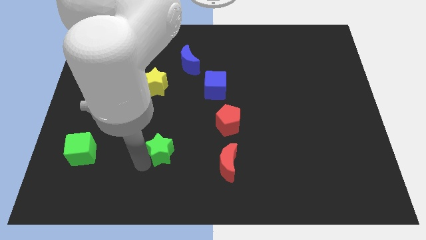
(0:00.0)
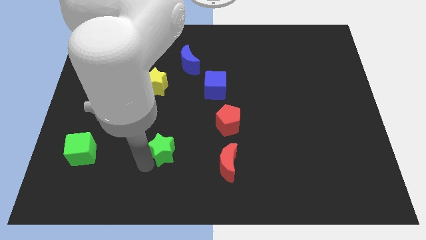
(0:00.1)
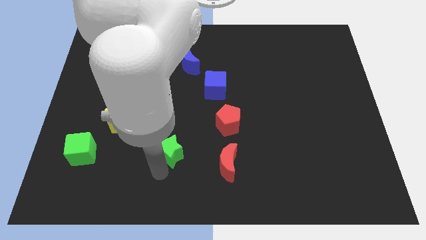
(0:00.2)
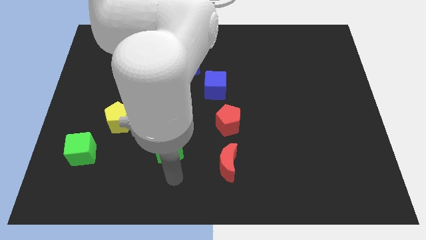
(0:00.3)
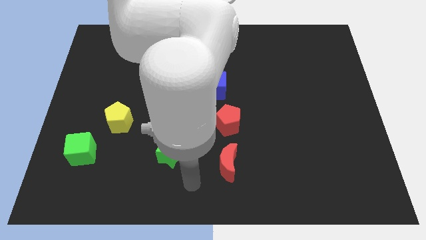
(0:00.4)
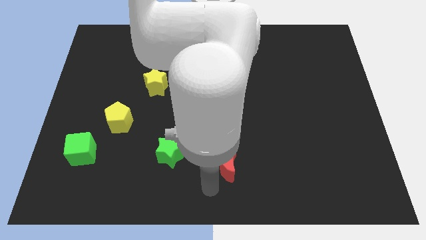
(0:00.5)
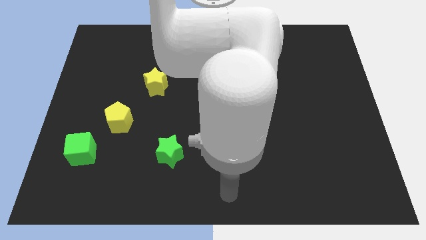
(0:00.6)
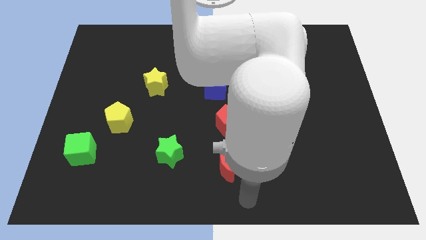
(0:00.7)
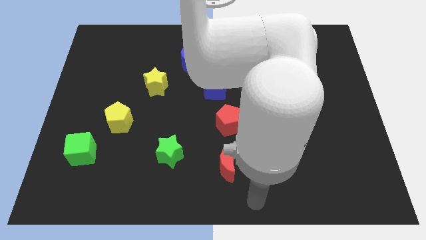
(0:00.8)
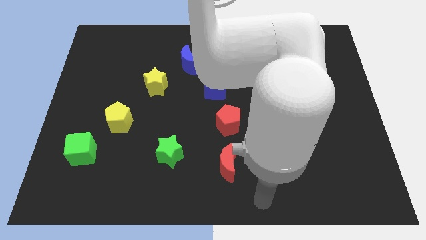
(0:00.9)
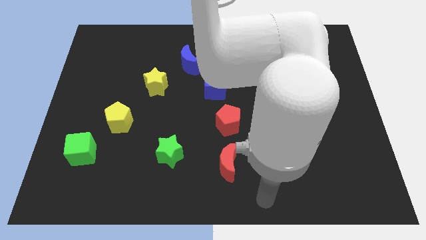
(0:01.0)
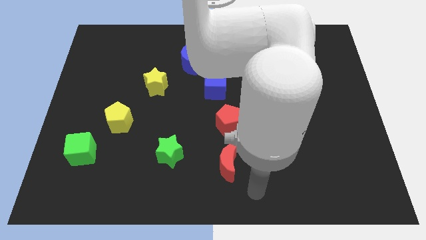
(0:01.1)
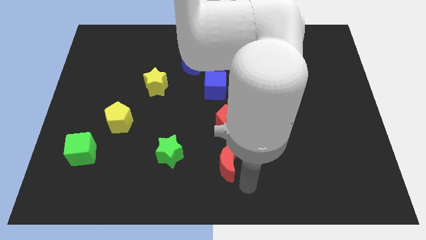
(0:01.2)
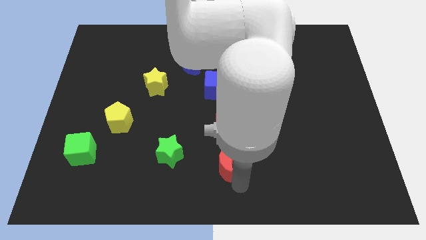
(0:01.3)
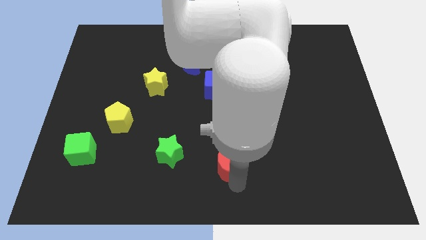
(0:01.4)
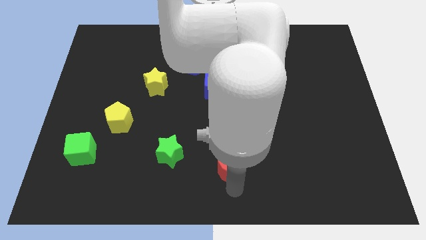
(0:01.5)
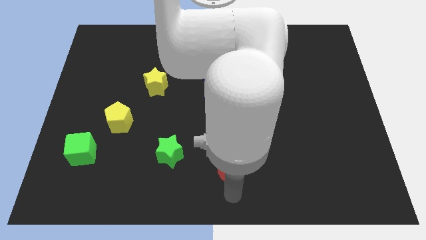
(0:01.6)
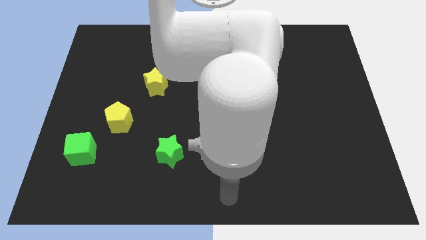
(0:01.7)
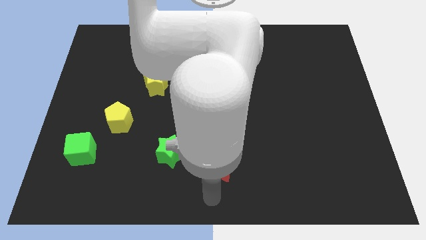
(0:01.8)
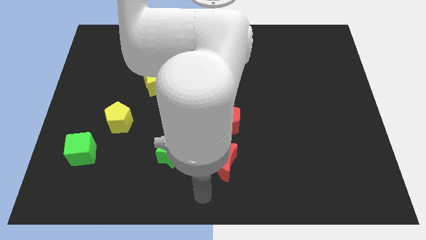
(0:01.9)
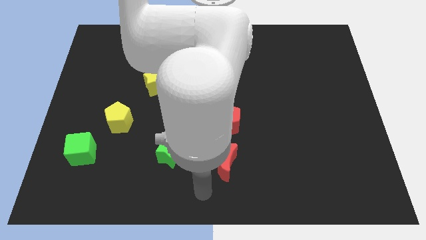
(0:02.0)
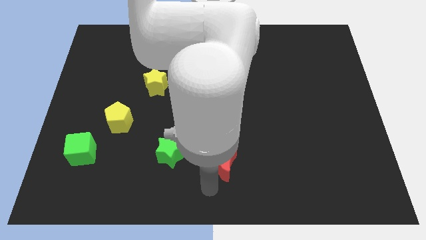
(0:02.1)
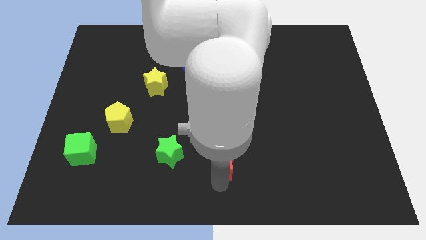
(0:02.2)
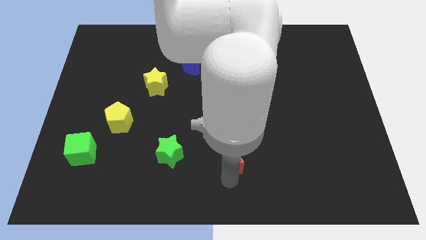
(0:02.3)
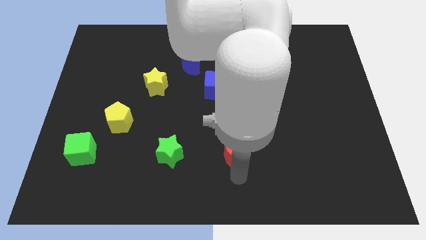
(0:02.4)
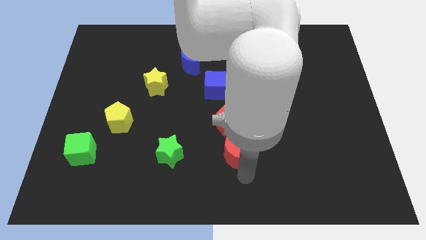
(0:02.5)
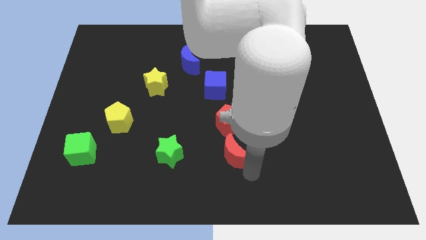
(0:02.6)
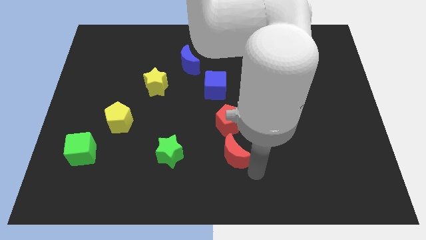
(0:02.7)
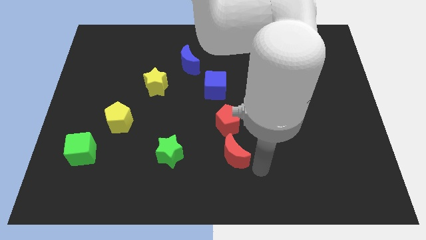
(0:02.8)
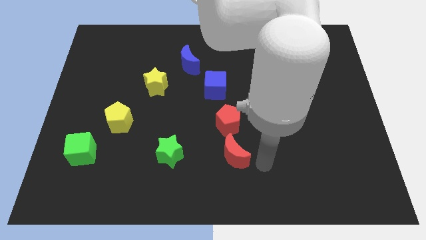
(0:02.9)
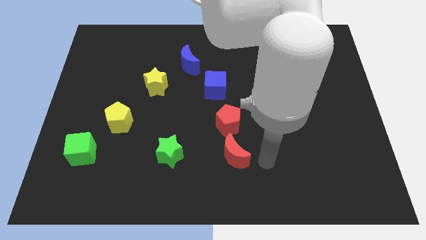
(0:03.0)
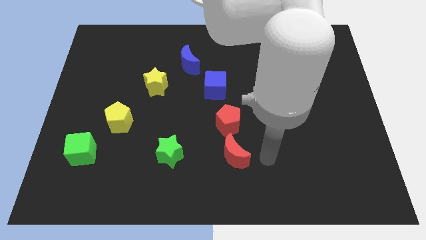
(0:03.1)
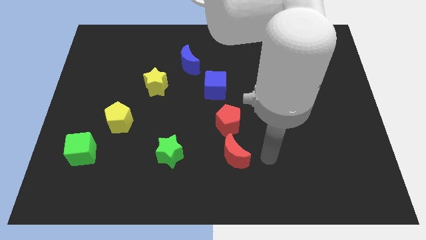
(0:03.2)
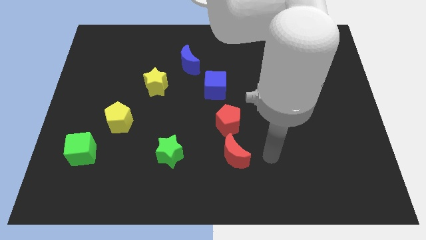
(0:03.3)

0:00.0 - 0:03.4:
place the green star to the left of the red moon

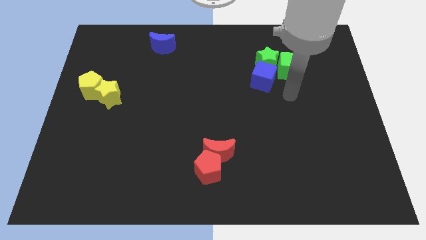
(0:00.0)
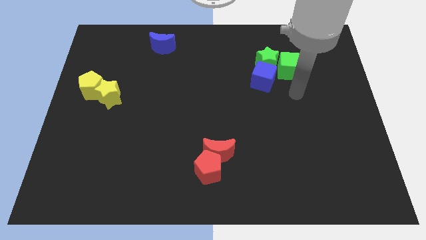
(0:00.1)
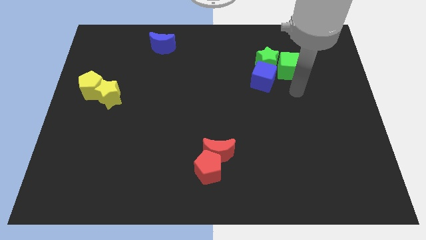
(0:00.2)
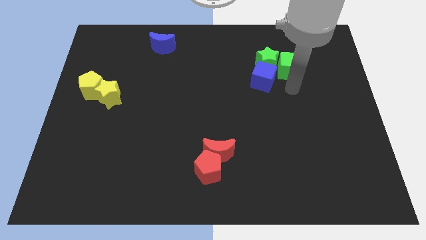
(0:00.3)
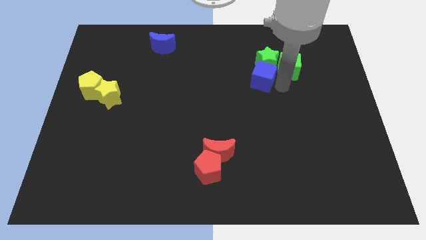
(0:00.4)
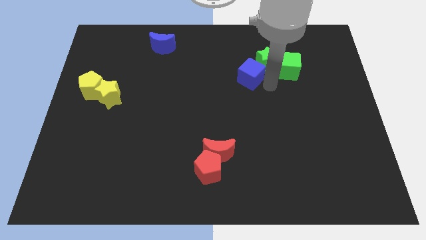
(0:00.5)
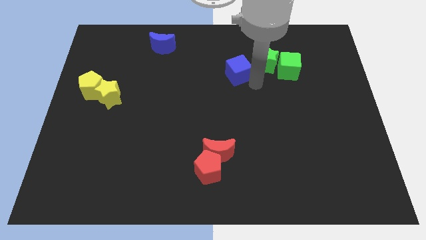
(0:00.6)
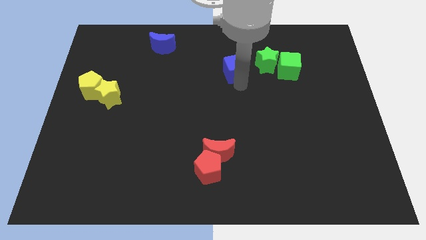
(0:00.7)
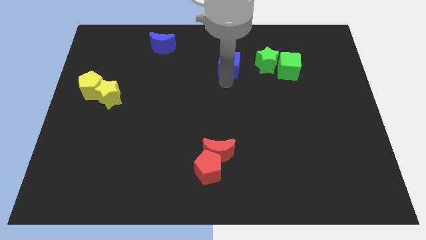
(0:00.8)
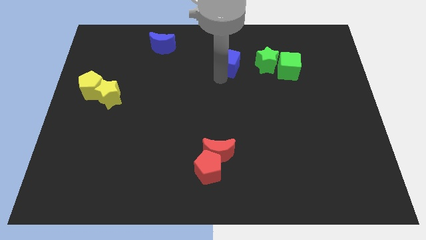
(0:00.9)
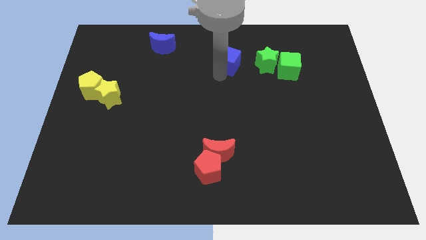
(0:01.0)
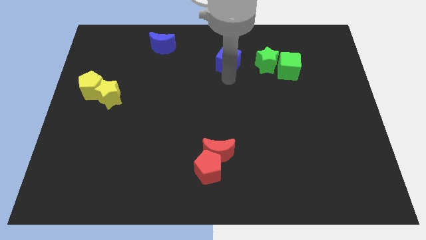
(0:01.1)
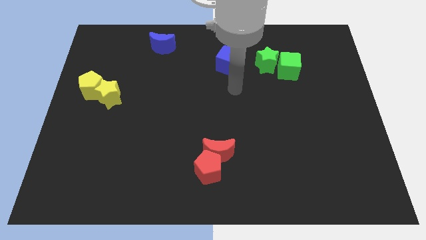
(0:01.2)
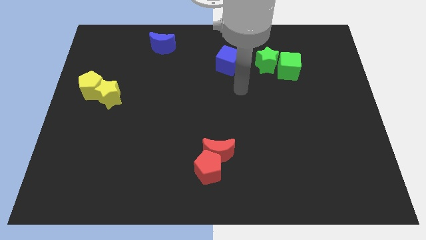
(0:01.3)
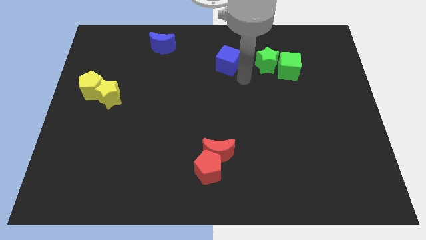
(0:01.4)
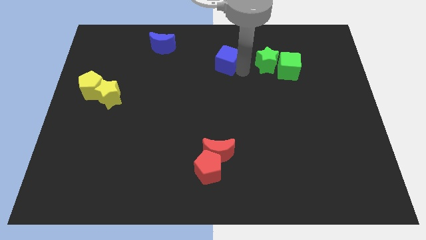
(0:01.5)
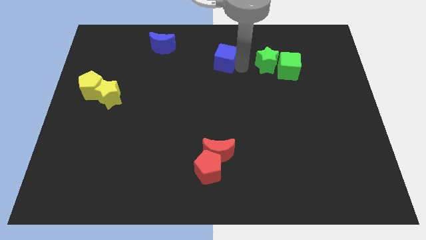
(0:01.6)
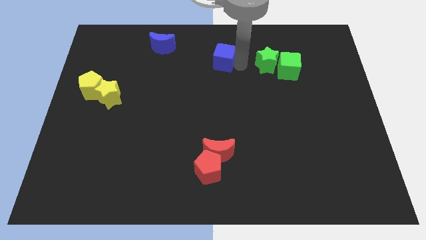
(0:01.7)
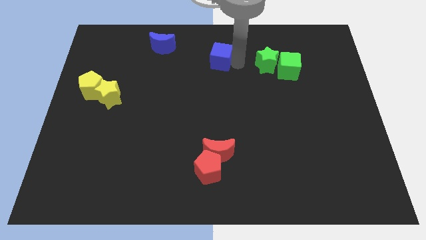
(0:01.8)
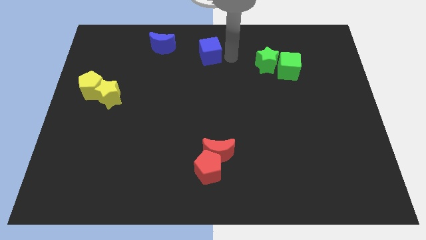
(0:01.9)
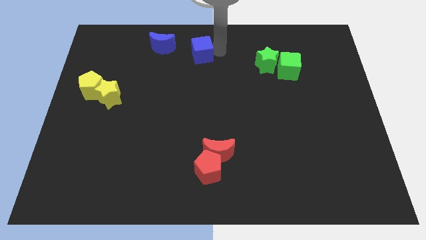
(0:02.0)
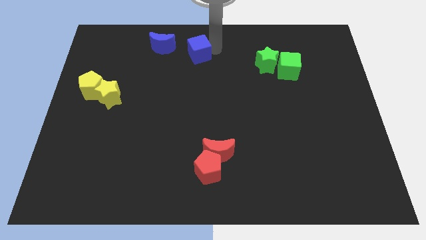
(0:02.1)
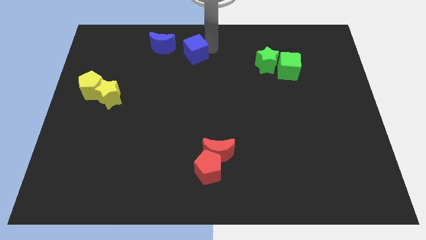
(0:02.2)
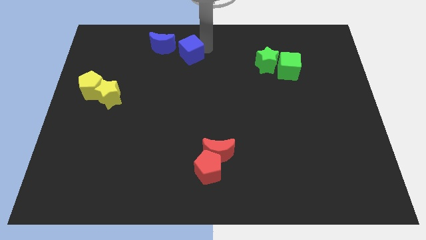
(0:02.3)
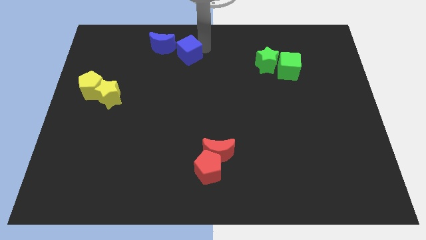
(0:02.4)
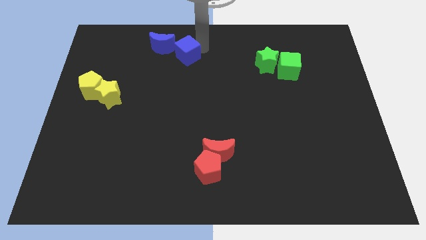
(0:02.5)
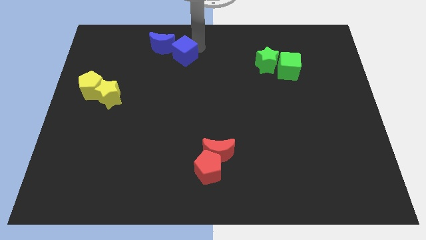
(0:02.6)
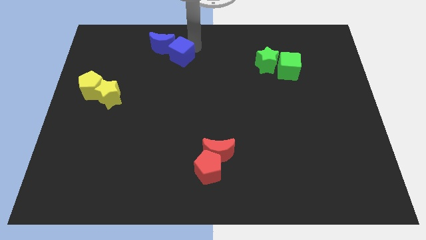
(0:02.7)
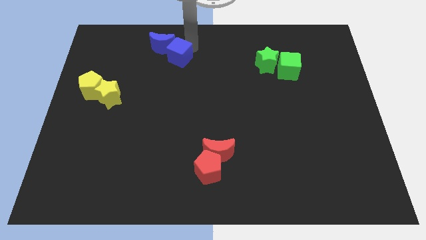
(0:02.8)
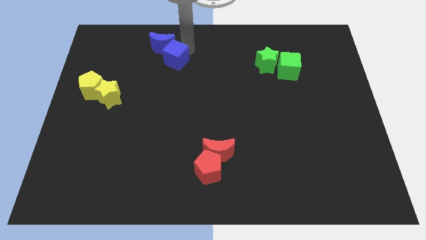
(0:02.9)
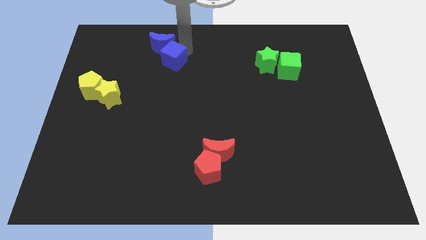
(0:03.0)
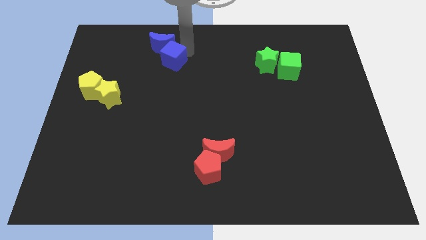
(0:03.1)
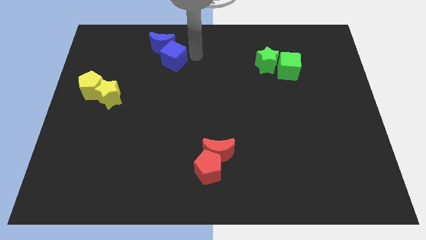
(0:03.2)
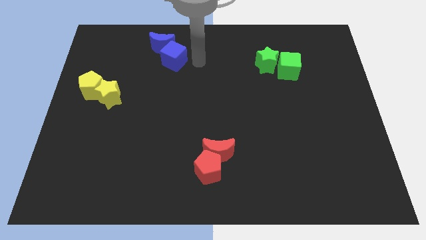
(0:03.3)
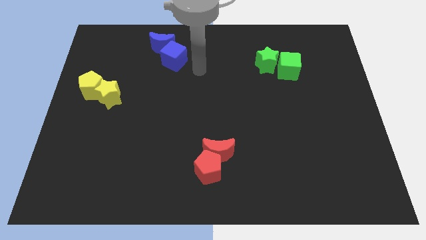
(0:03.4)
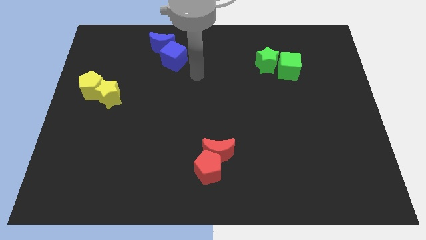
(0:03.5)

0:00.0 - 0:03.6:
place the blue cube below the blue crescent

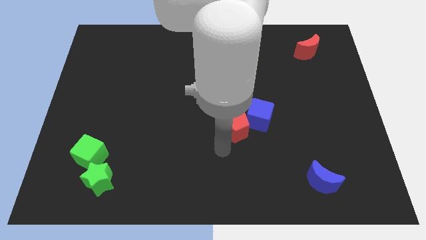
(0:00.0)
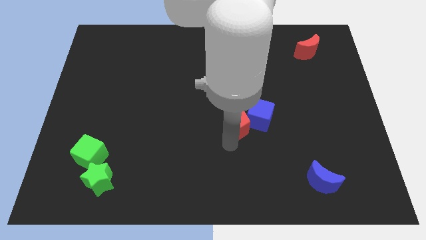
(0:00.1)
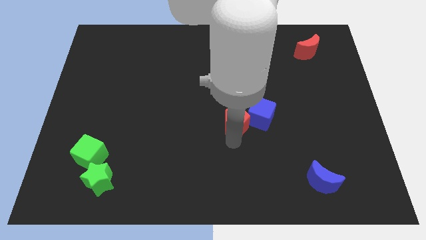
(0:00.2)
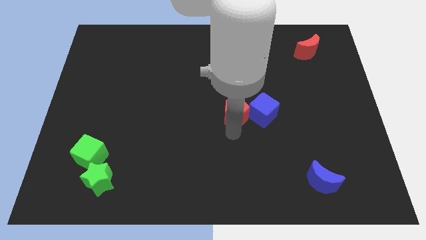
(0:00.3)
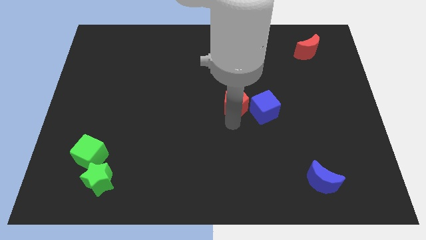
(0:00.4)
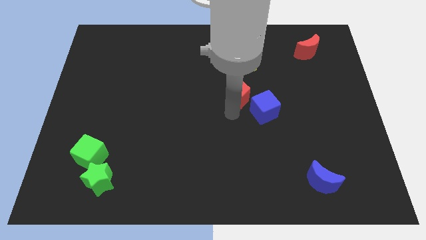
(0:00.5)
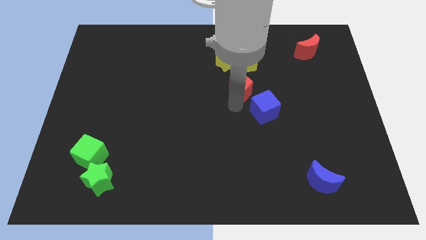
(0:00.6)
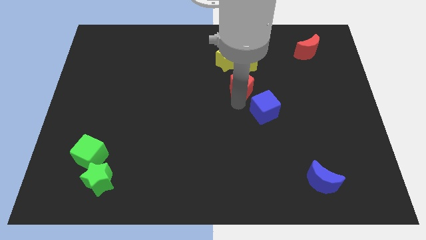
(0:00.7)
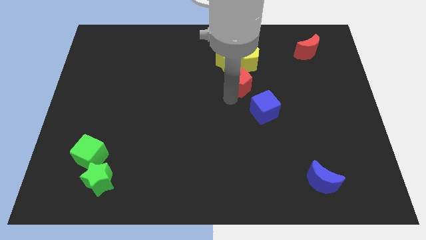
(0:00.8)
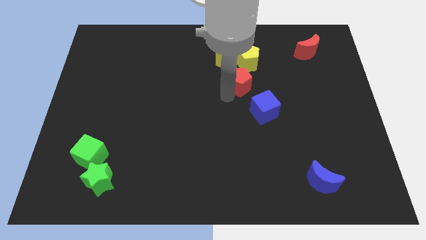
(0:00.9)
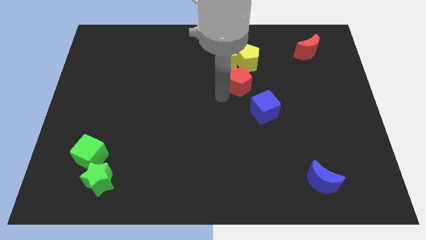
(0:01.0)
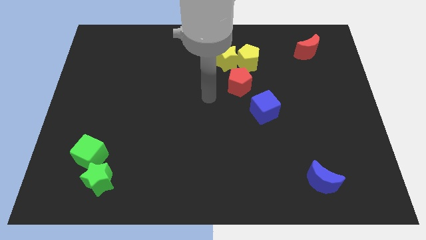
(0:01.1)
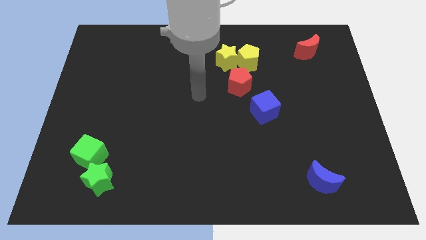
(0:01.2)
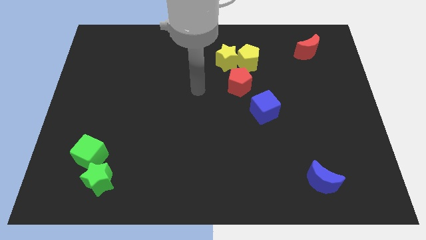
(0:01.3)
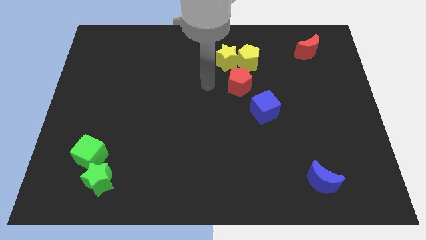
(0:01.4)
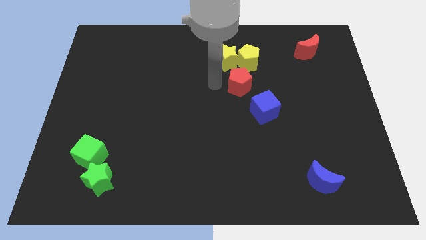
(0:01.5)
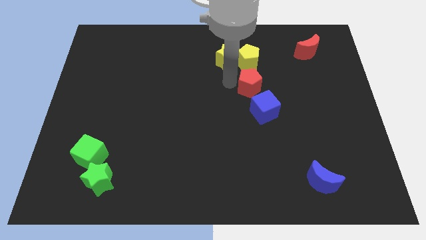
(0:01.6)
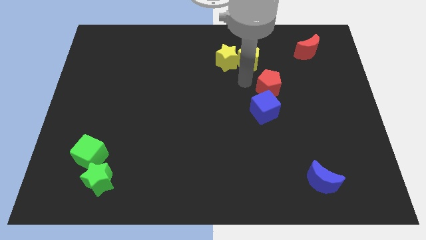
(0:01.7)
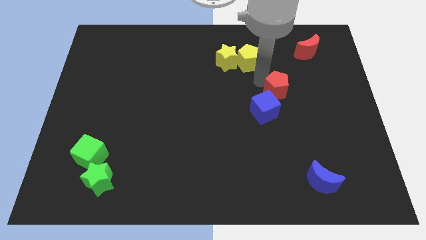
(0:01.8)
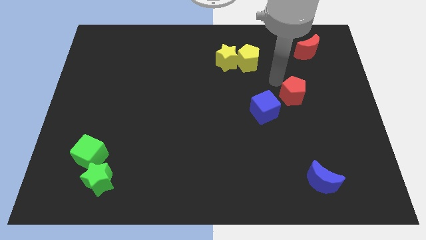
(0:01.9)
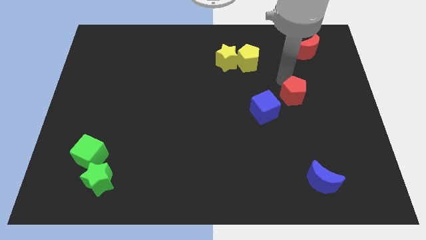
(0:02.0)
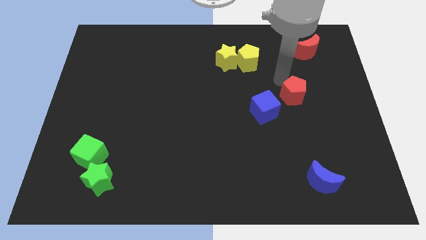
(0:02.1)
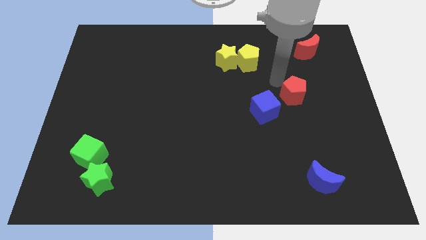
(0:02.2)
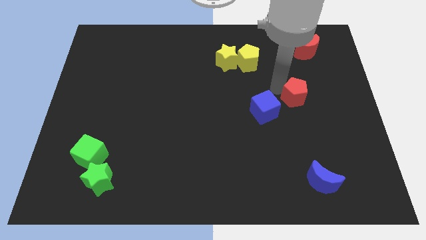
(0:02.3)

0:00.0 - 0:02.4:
move the red pentagon towards the center right
